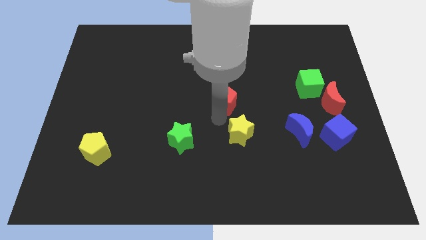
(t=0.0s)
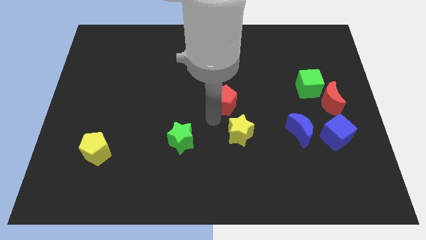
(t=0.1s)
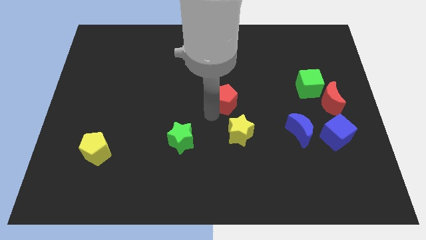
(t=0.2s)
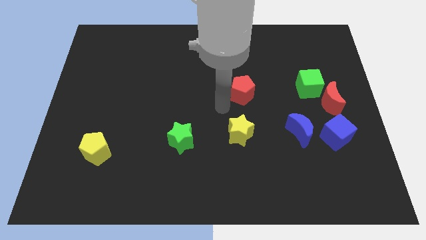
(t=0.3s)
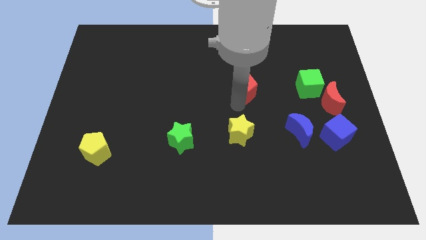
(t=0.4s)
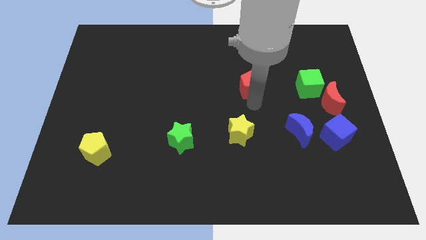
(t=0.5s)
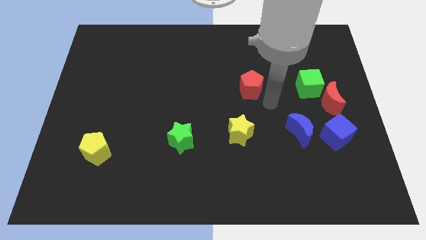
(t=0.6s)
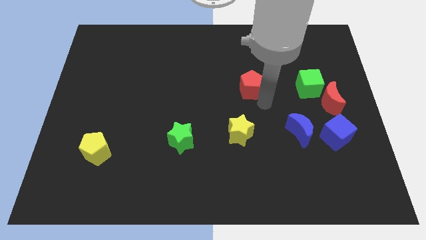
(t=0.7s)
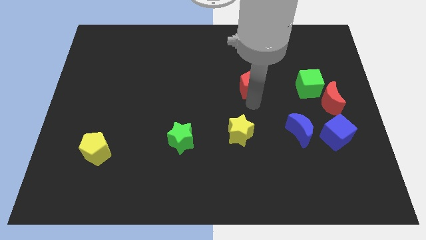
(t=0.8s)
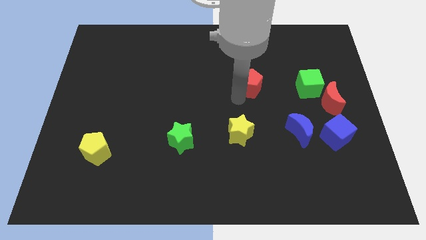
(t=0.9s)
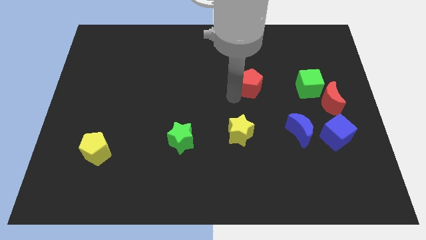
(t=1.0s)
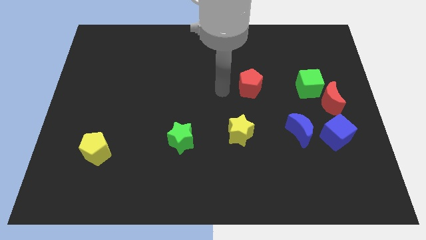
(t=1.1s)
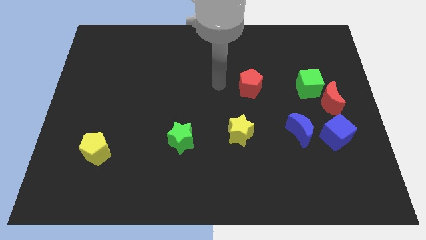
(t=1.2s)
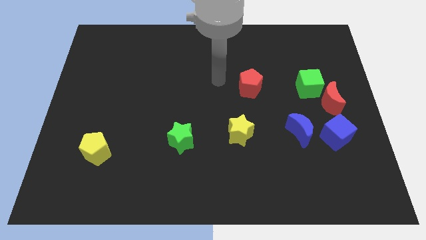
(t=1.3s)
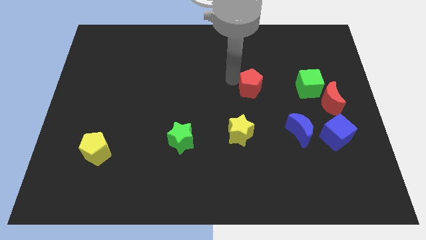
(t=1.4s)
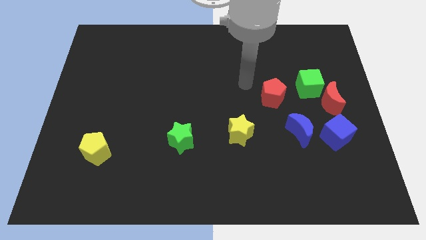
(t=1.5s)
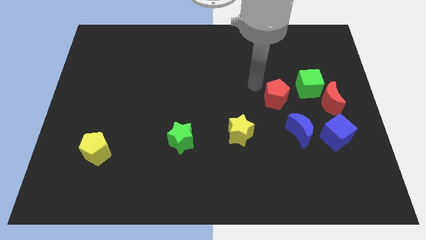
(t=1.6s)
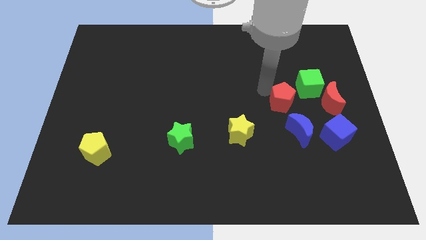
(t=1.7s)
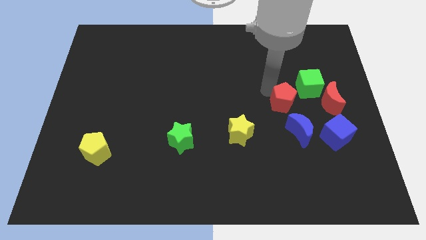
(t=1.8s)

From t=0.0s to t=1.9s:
place the red pentagon close to the green cube

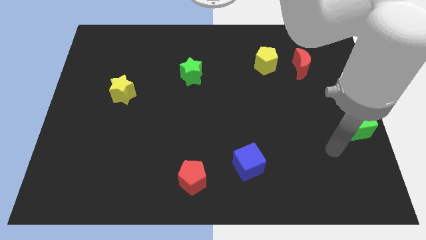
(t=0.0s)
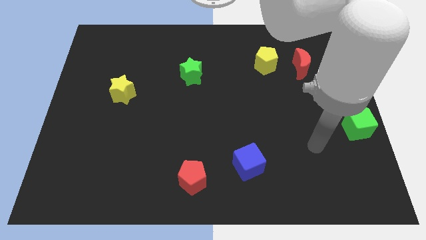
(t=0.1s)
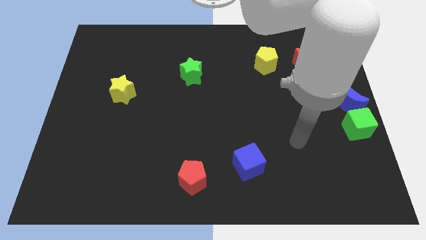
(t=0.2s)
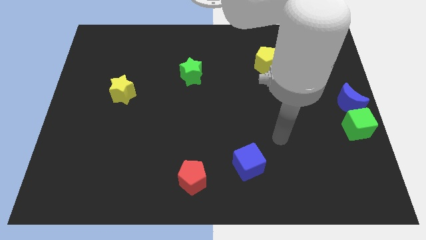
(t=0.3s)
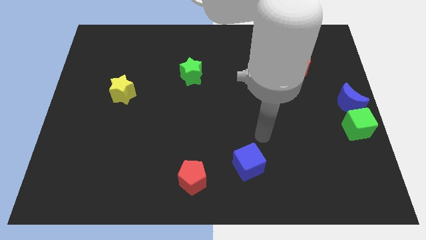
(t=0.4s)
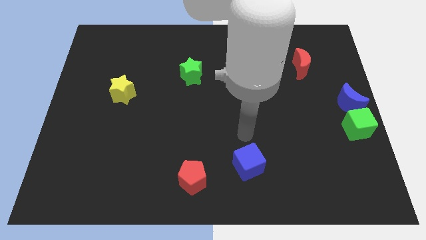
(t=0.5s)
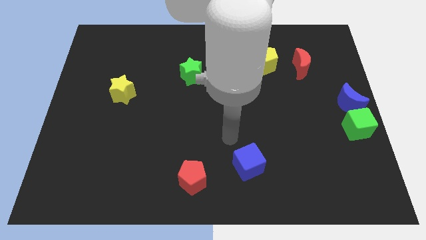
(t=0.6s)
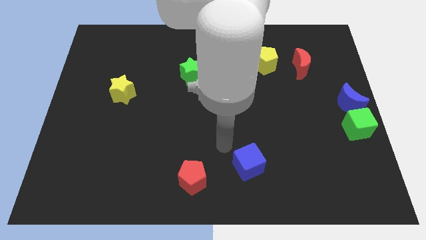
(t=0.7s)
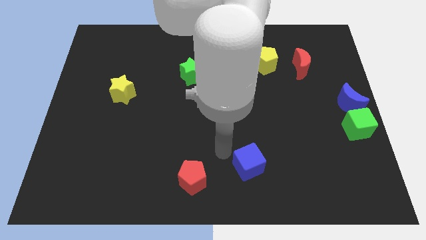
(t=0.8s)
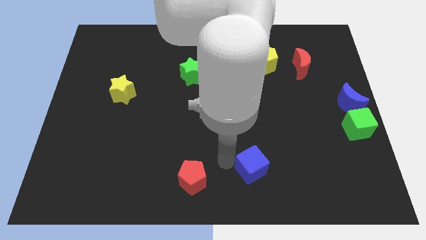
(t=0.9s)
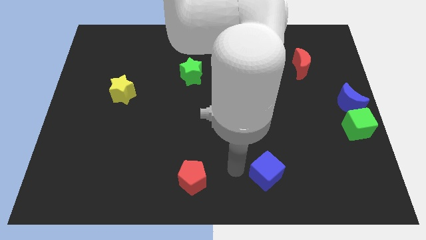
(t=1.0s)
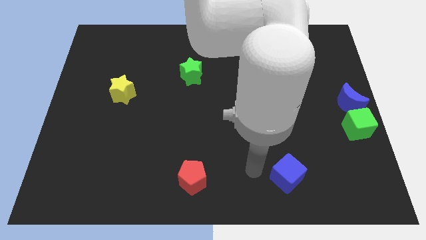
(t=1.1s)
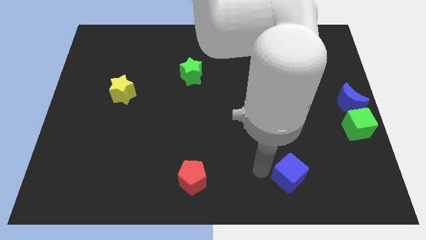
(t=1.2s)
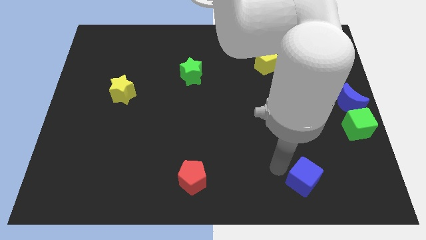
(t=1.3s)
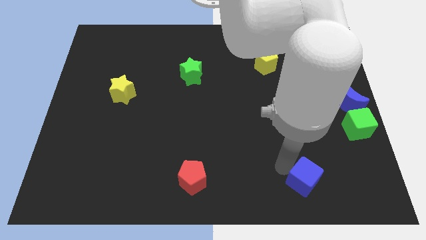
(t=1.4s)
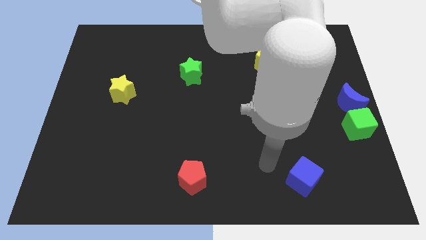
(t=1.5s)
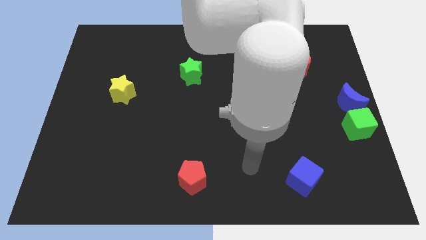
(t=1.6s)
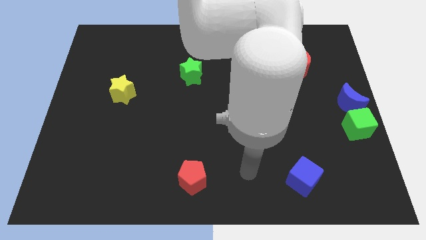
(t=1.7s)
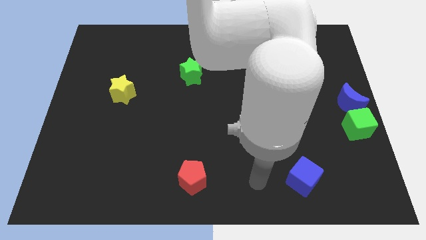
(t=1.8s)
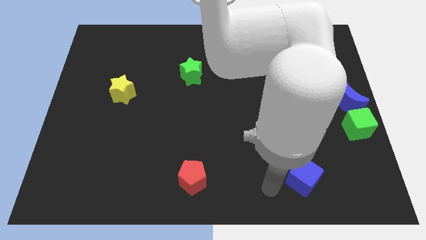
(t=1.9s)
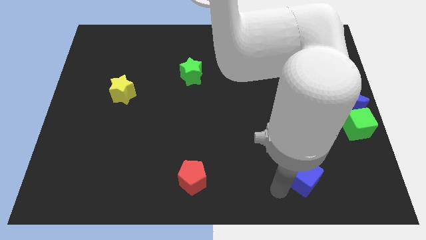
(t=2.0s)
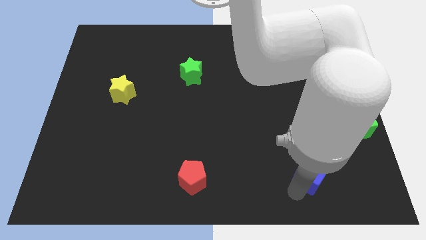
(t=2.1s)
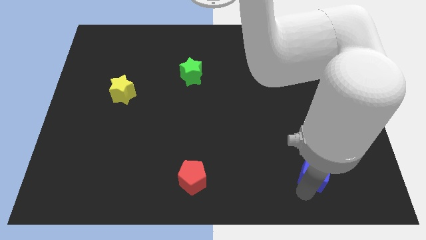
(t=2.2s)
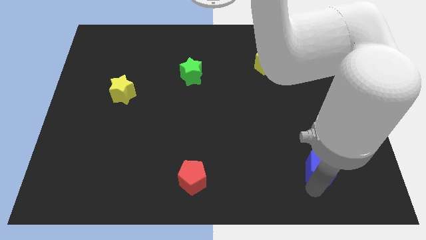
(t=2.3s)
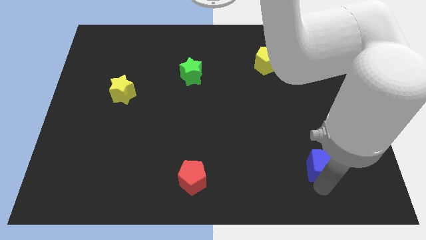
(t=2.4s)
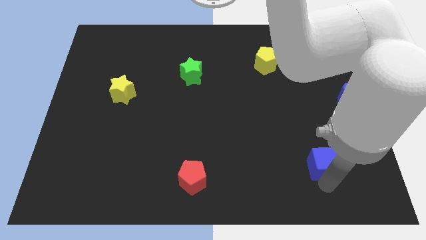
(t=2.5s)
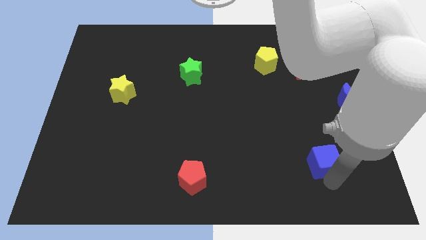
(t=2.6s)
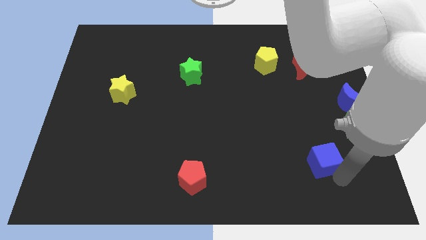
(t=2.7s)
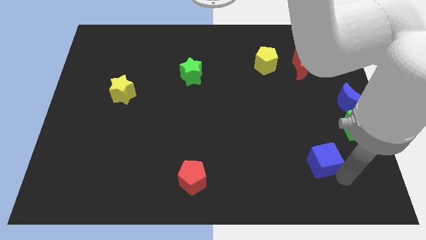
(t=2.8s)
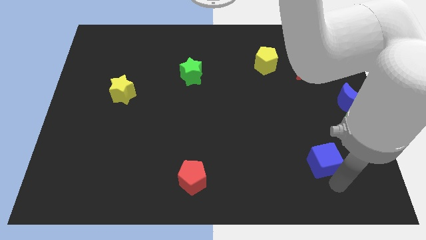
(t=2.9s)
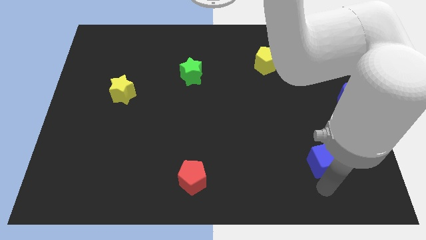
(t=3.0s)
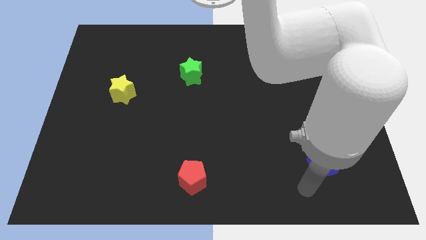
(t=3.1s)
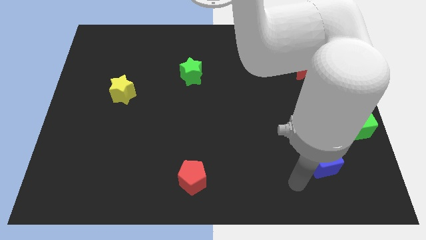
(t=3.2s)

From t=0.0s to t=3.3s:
put the blue cube to the right of the red pentagon

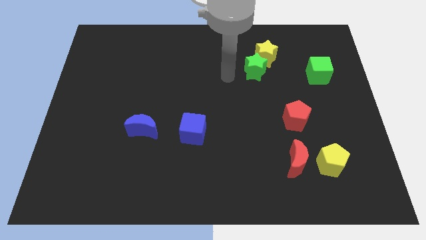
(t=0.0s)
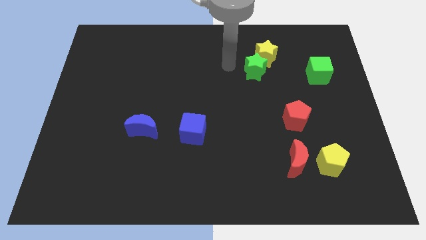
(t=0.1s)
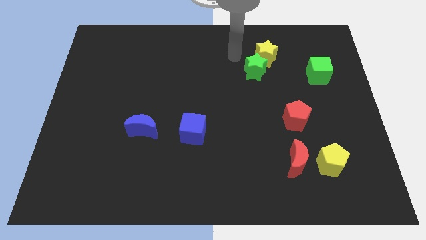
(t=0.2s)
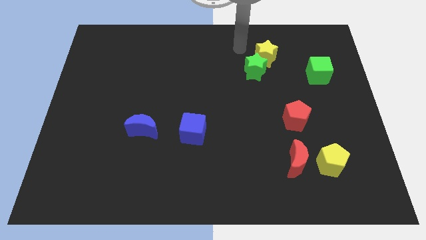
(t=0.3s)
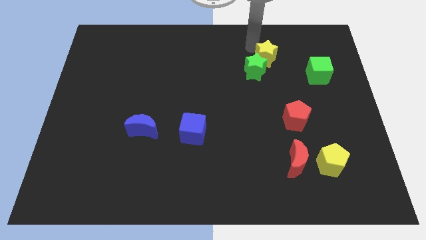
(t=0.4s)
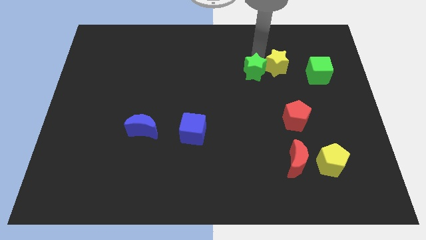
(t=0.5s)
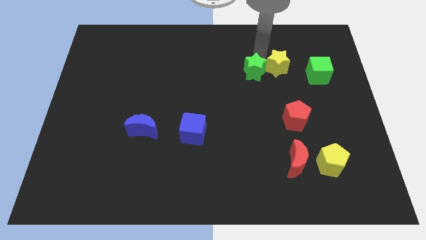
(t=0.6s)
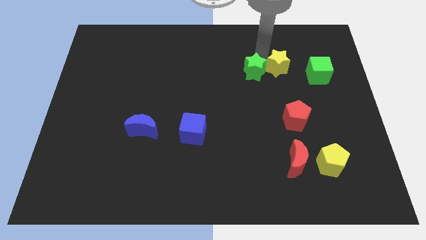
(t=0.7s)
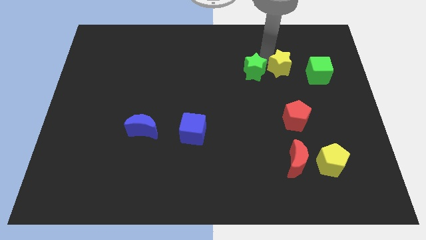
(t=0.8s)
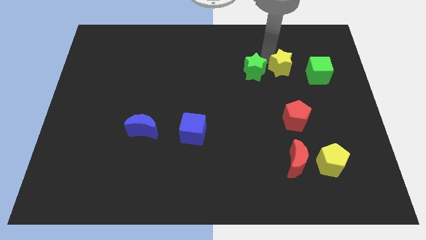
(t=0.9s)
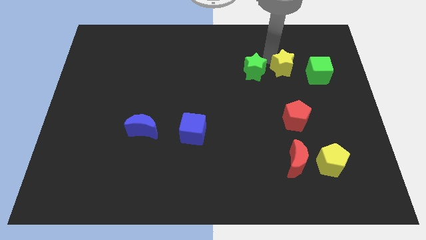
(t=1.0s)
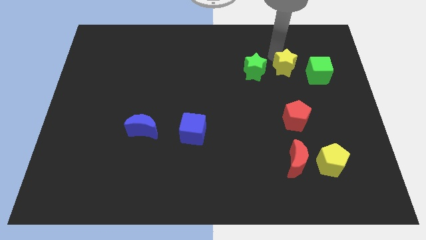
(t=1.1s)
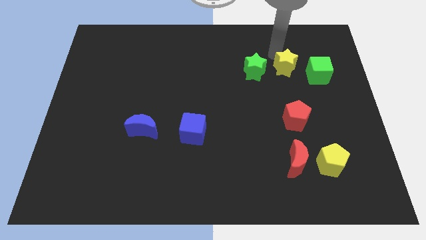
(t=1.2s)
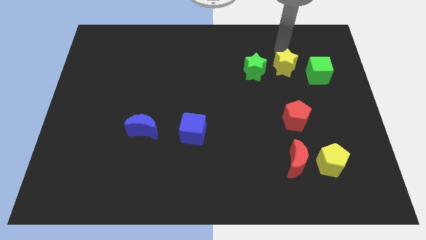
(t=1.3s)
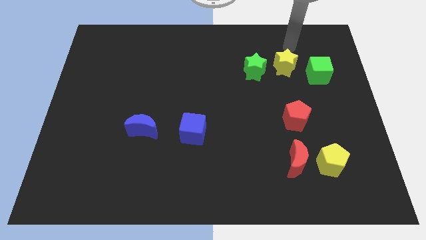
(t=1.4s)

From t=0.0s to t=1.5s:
place the yellow star between the green star and green cube

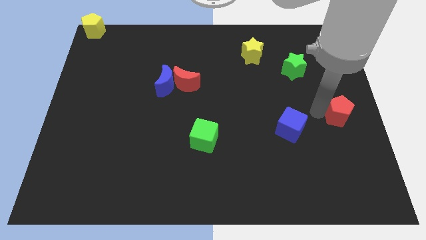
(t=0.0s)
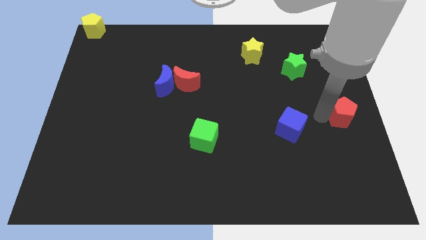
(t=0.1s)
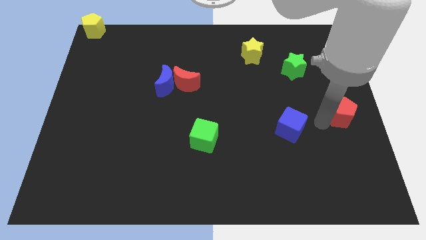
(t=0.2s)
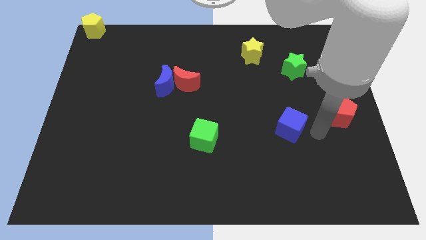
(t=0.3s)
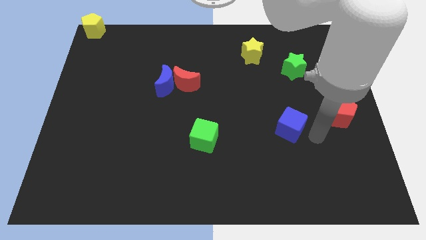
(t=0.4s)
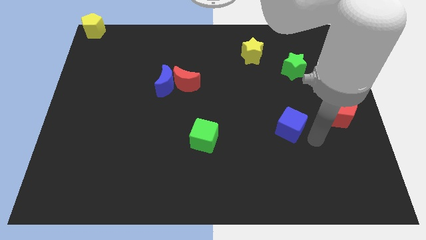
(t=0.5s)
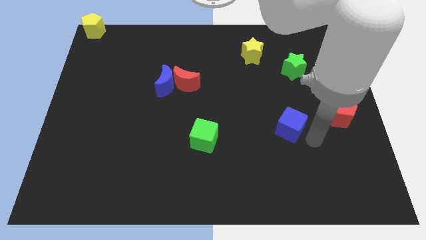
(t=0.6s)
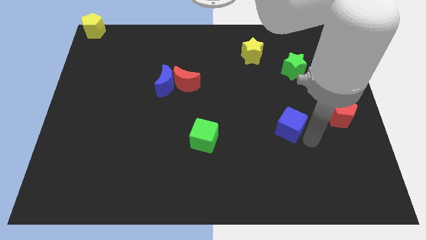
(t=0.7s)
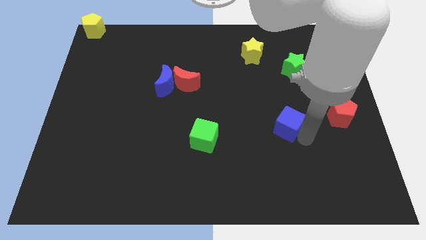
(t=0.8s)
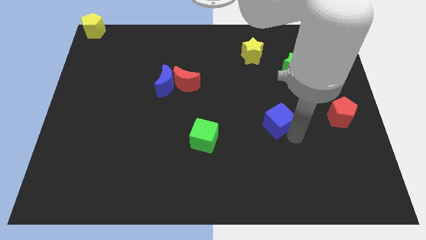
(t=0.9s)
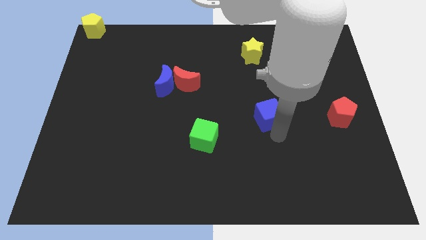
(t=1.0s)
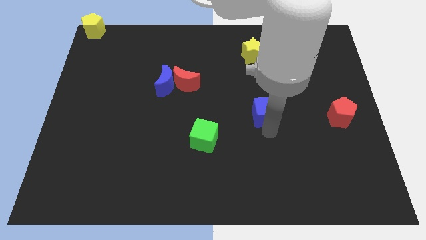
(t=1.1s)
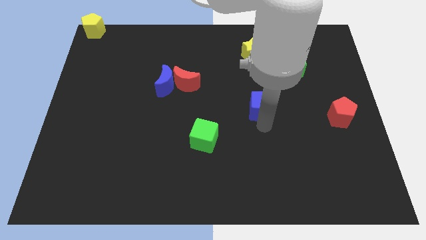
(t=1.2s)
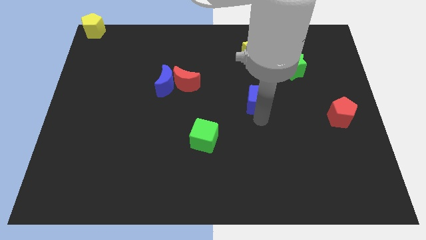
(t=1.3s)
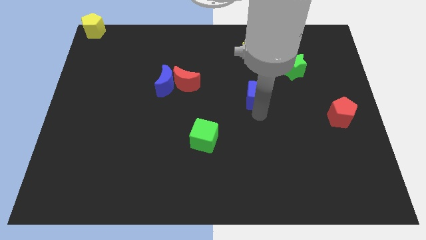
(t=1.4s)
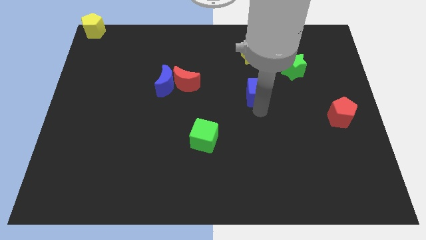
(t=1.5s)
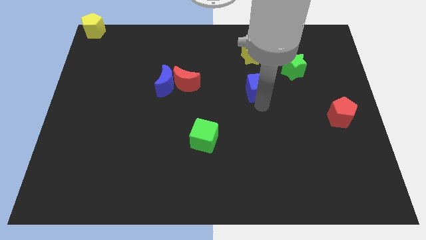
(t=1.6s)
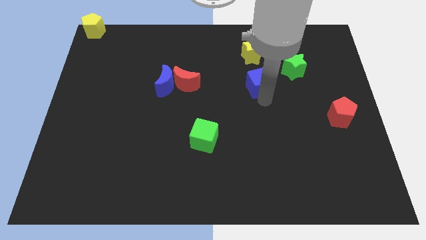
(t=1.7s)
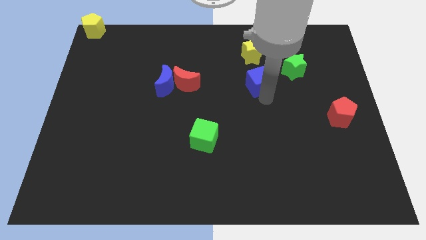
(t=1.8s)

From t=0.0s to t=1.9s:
put the blue cube vertically below the yellow star

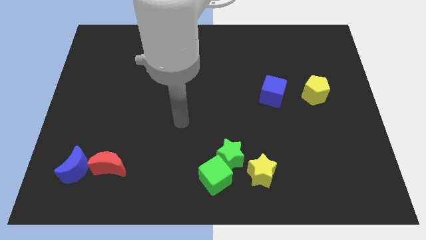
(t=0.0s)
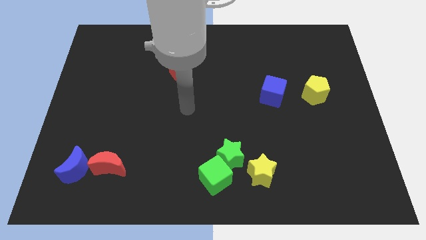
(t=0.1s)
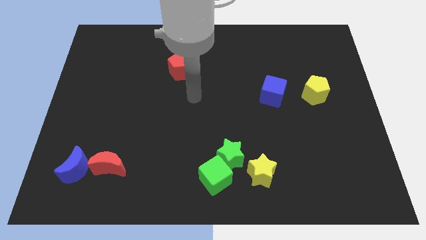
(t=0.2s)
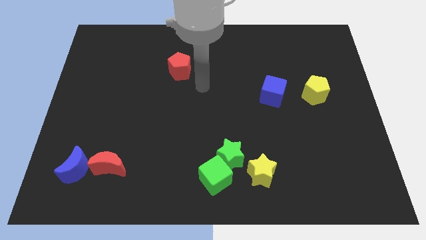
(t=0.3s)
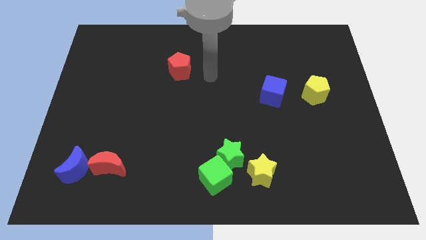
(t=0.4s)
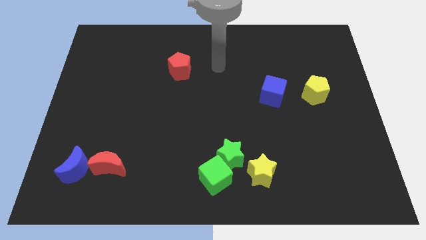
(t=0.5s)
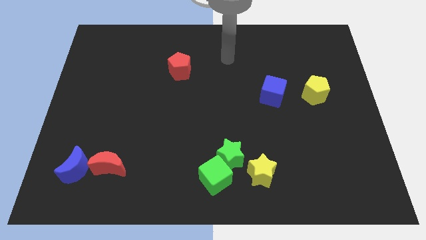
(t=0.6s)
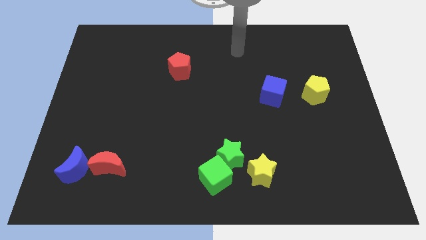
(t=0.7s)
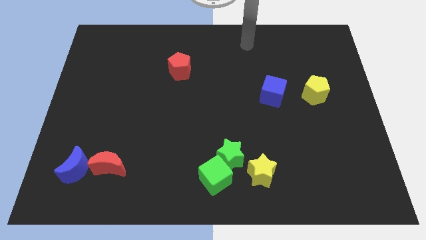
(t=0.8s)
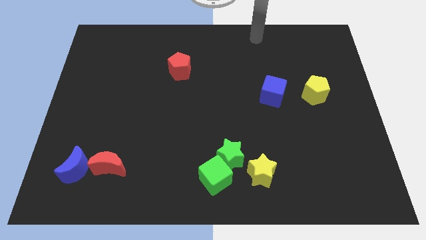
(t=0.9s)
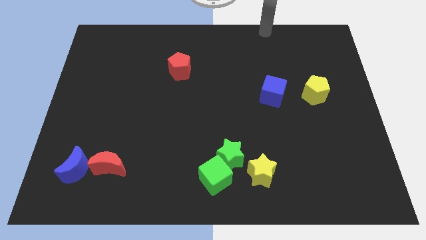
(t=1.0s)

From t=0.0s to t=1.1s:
move the arm diagonally up
